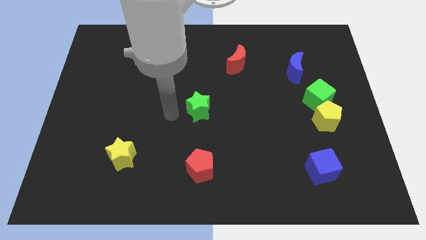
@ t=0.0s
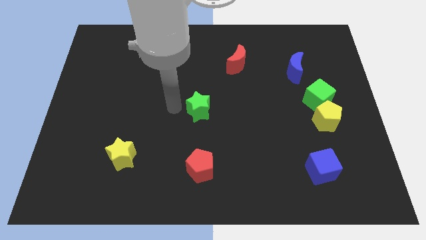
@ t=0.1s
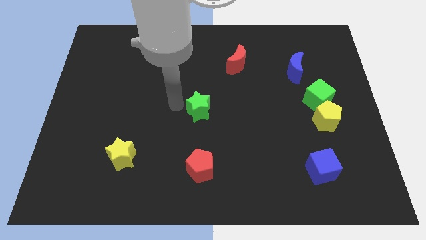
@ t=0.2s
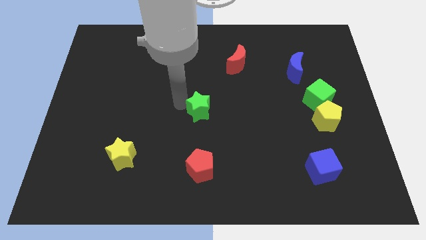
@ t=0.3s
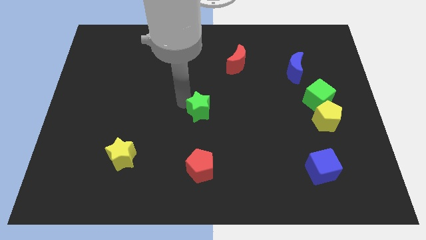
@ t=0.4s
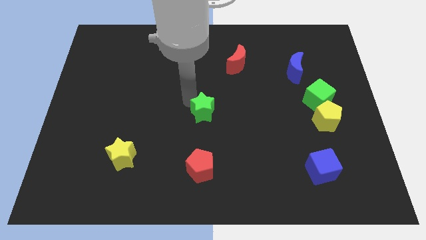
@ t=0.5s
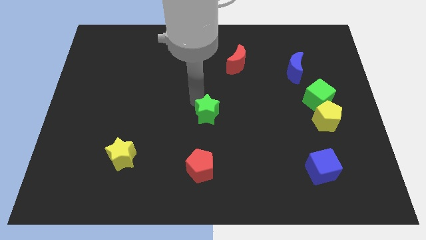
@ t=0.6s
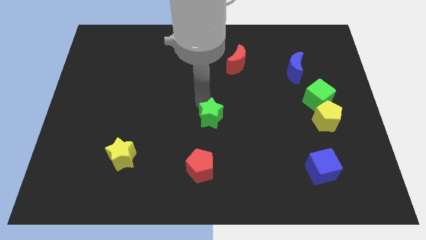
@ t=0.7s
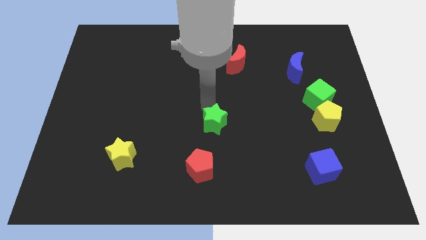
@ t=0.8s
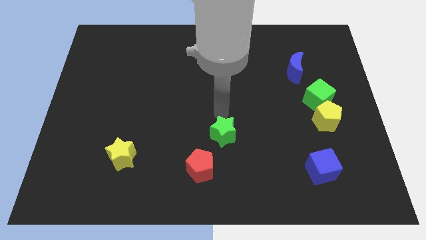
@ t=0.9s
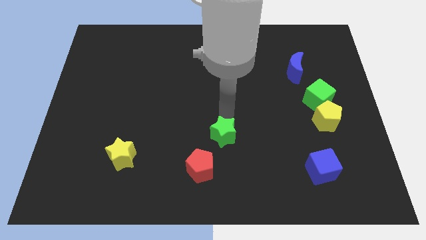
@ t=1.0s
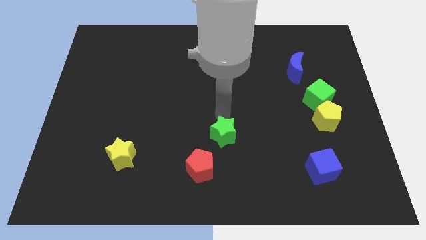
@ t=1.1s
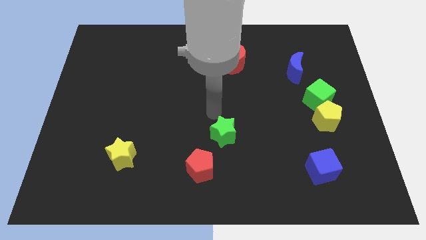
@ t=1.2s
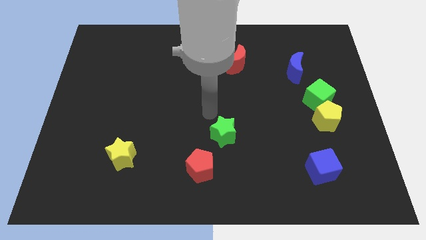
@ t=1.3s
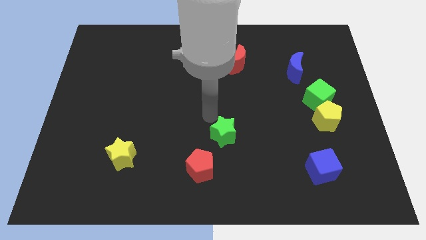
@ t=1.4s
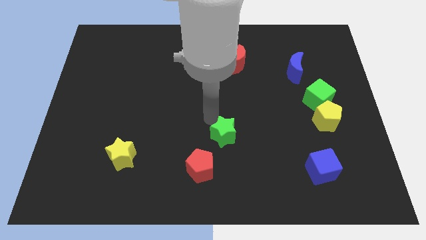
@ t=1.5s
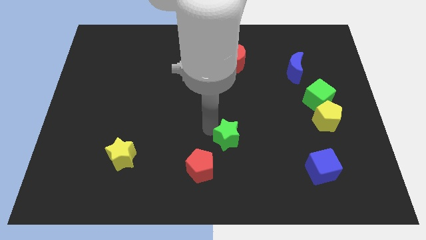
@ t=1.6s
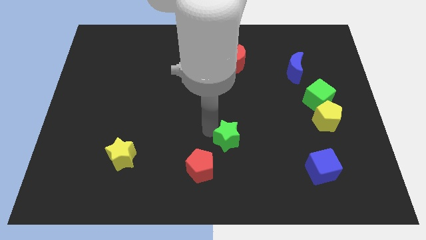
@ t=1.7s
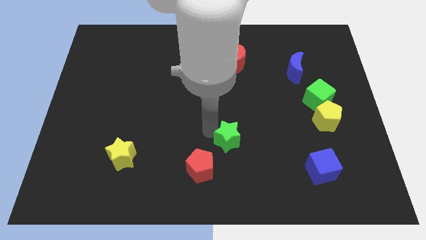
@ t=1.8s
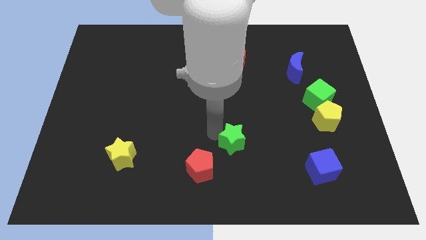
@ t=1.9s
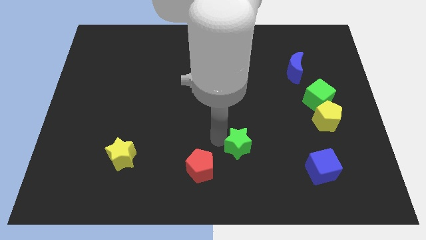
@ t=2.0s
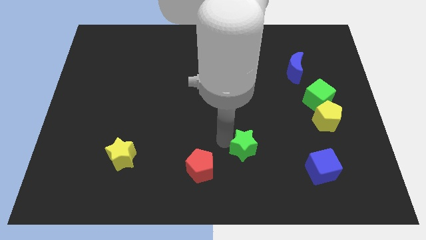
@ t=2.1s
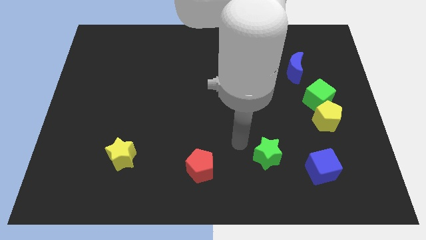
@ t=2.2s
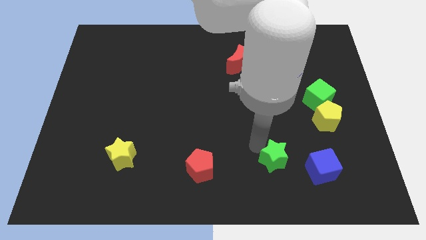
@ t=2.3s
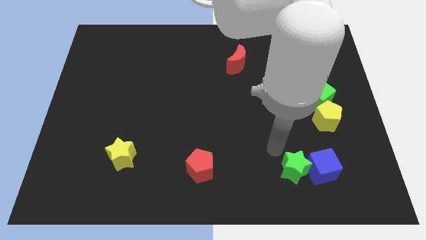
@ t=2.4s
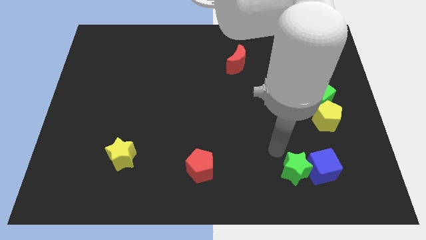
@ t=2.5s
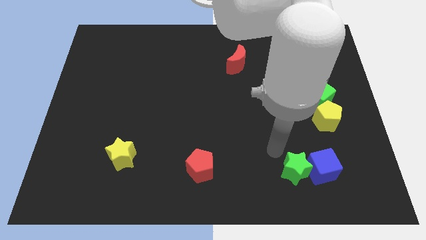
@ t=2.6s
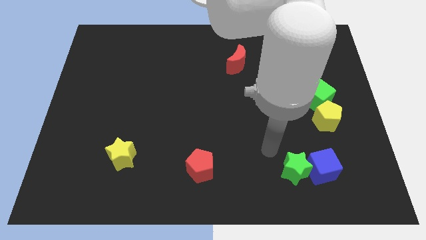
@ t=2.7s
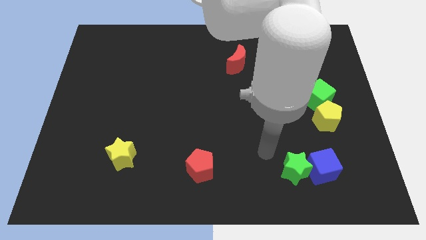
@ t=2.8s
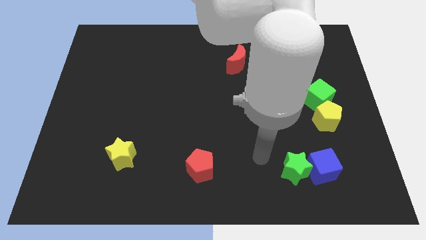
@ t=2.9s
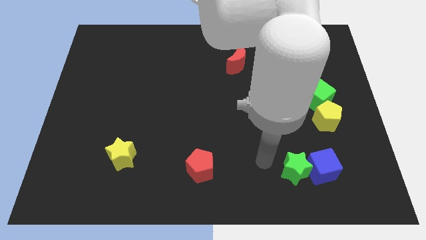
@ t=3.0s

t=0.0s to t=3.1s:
slide green star into blue cube

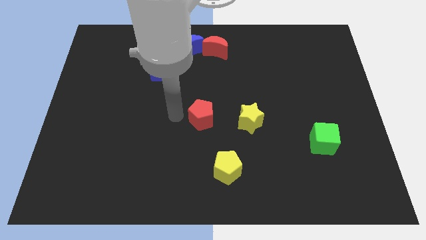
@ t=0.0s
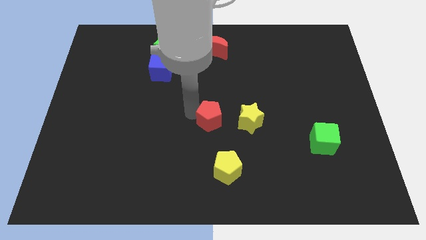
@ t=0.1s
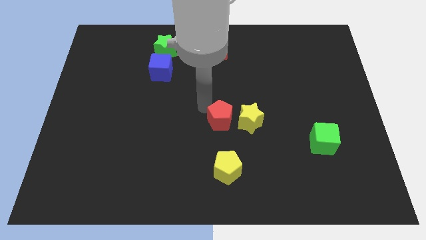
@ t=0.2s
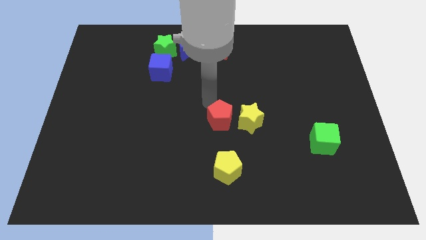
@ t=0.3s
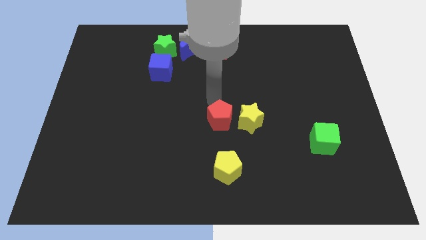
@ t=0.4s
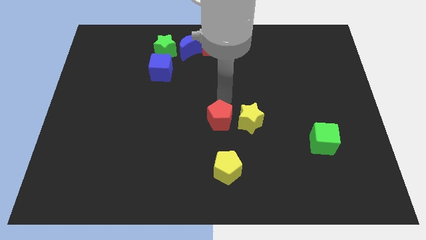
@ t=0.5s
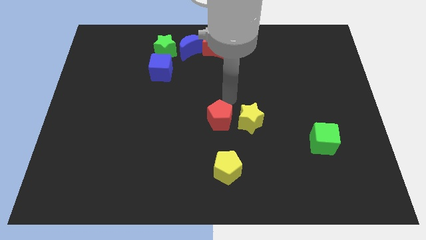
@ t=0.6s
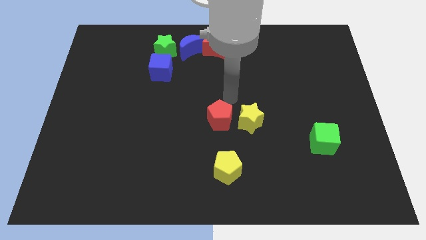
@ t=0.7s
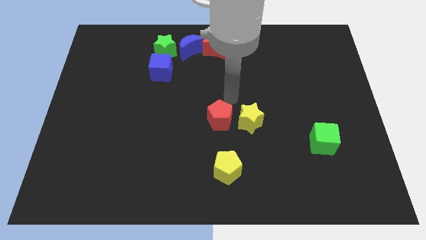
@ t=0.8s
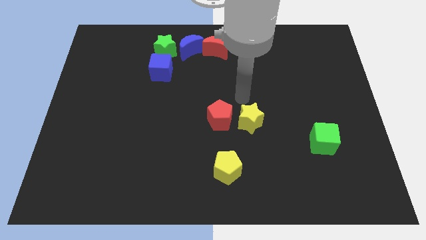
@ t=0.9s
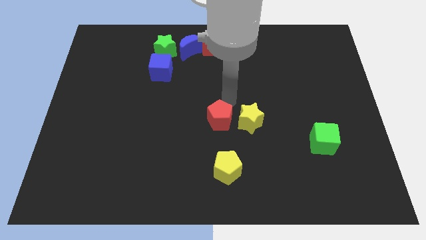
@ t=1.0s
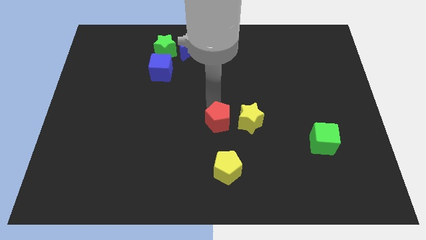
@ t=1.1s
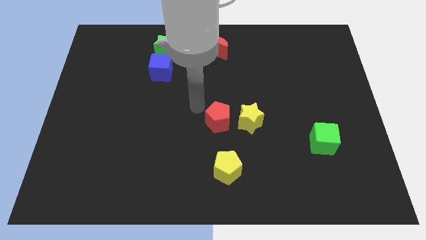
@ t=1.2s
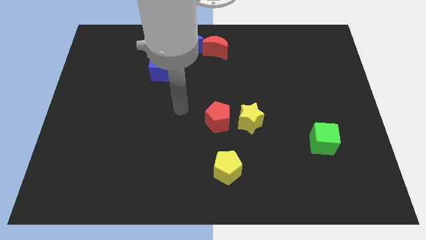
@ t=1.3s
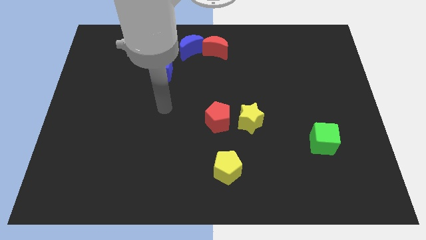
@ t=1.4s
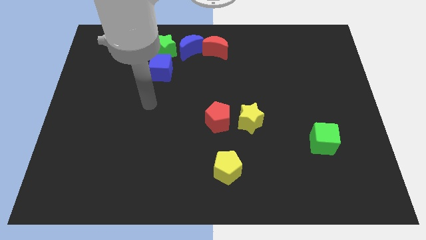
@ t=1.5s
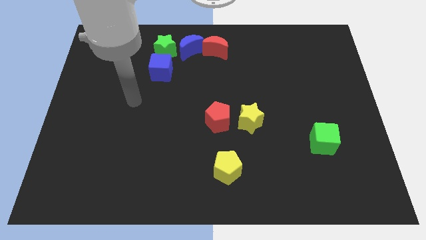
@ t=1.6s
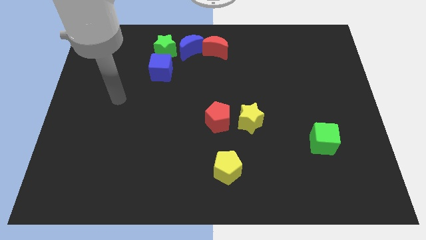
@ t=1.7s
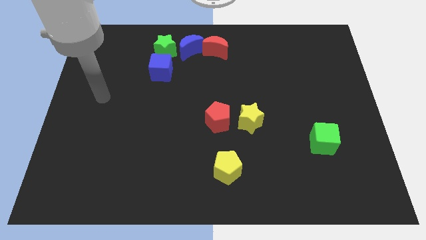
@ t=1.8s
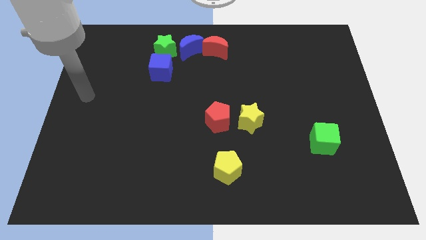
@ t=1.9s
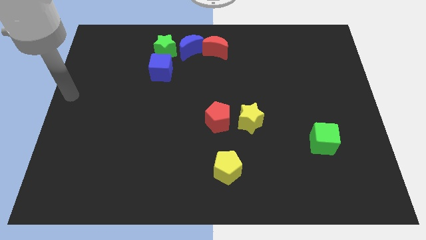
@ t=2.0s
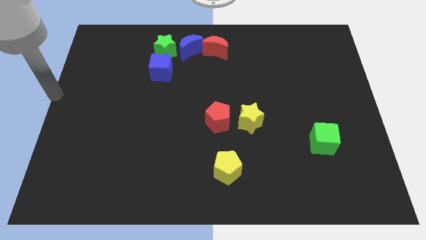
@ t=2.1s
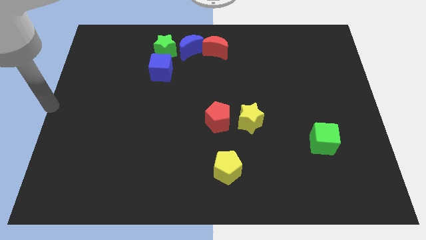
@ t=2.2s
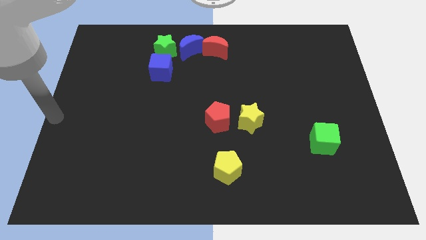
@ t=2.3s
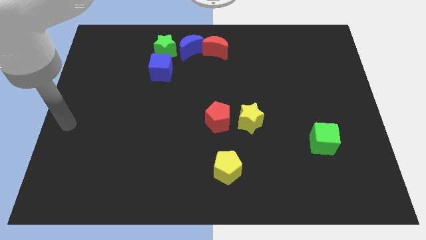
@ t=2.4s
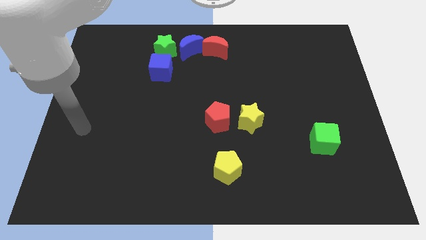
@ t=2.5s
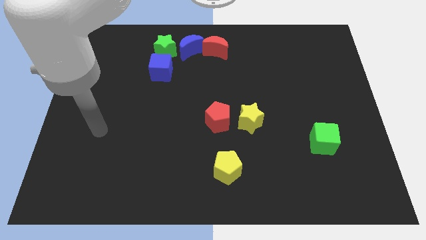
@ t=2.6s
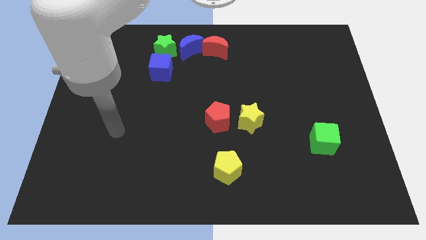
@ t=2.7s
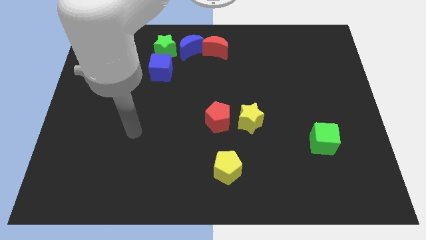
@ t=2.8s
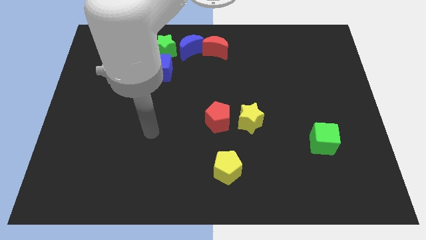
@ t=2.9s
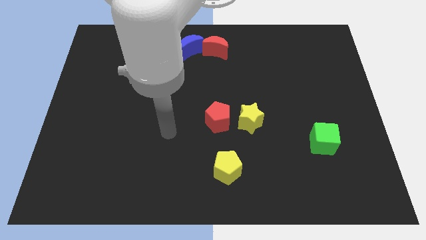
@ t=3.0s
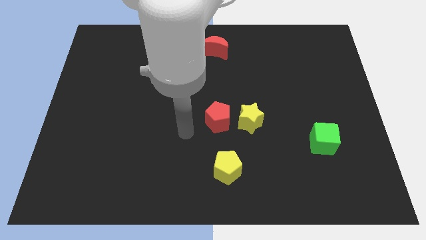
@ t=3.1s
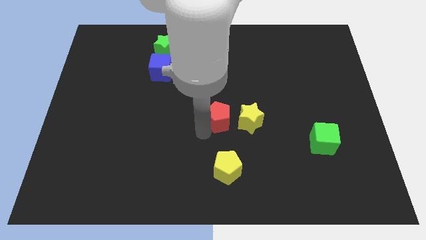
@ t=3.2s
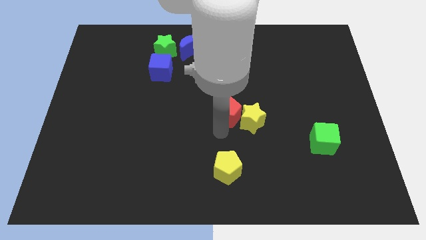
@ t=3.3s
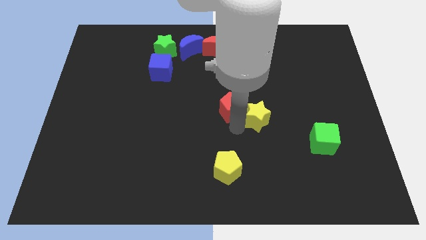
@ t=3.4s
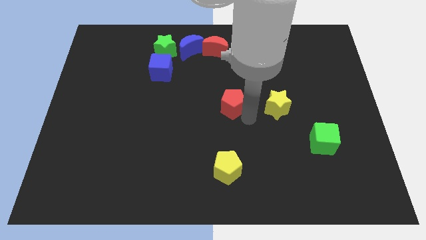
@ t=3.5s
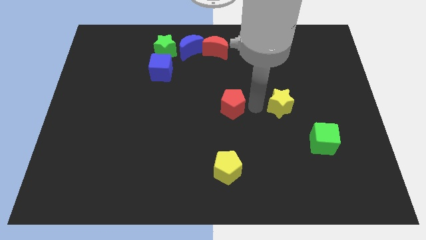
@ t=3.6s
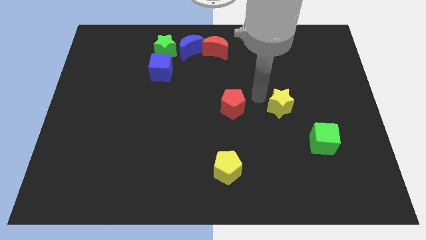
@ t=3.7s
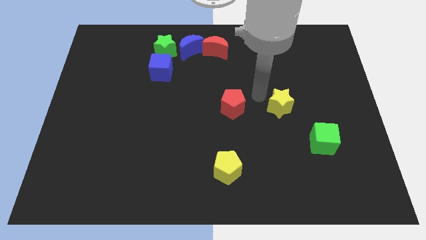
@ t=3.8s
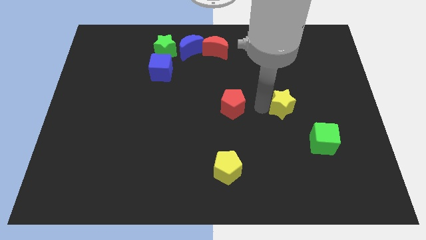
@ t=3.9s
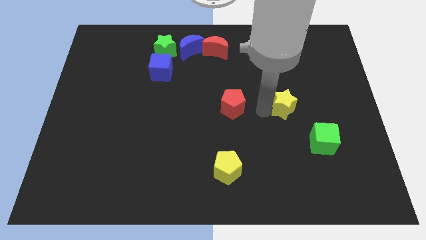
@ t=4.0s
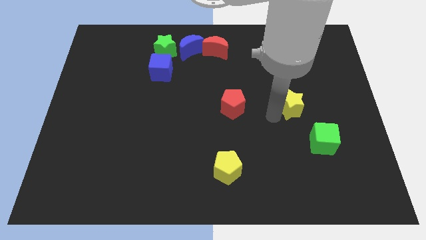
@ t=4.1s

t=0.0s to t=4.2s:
hit the yellow star with the red pentagon

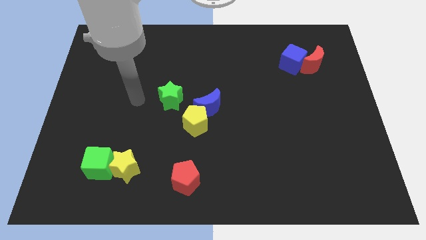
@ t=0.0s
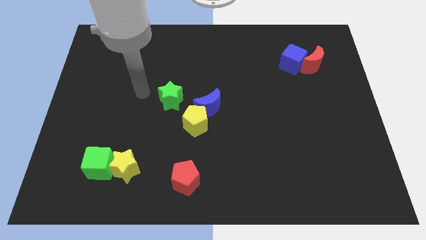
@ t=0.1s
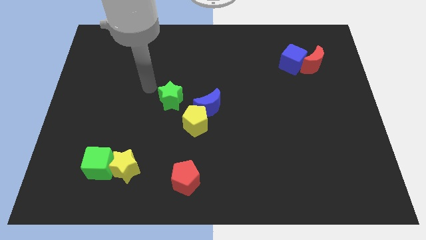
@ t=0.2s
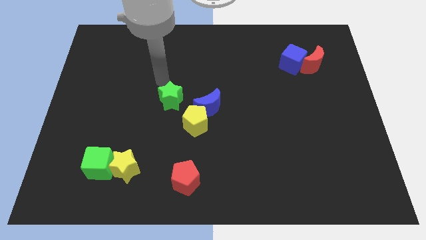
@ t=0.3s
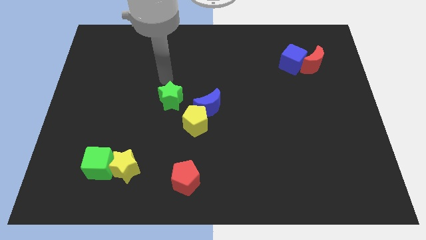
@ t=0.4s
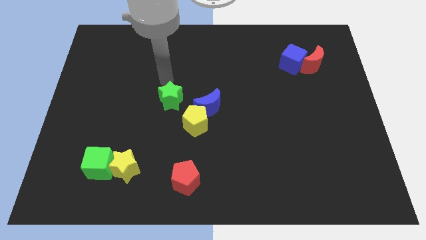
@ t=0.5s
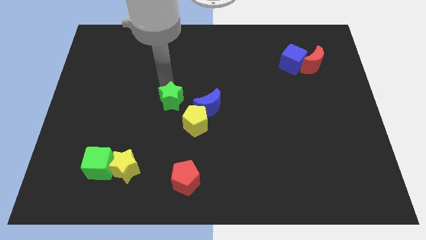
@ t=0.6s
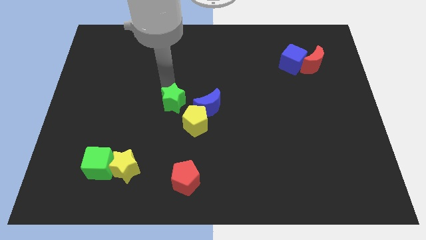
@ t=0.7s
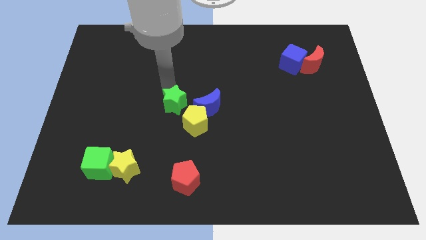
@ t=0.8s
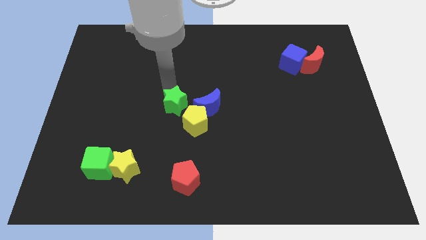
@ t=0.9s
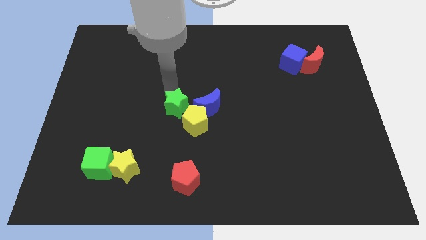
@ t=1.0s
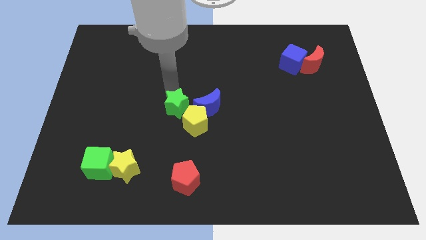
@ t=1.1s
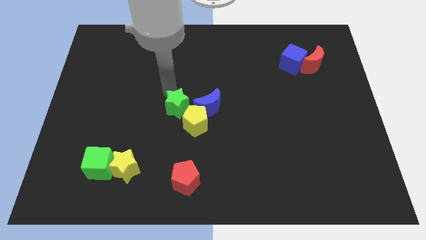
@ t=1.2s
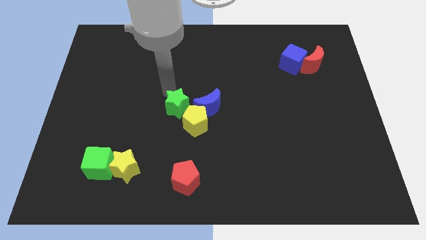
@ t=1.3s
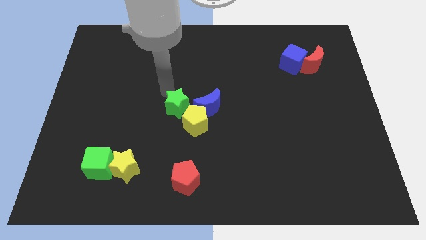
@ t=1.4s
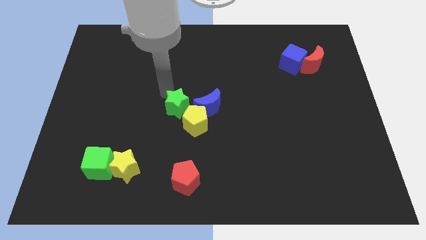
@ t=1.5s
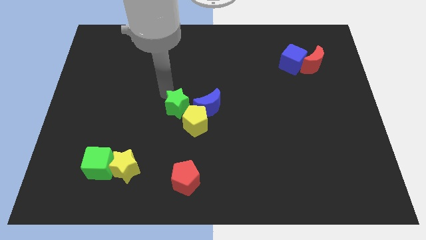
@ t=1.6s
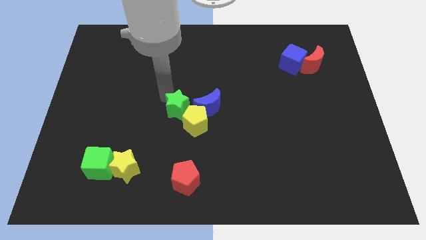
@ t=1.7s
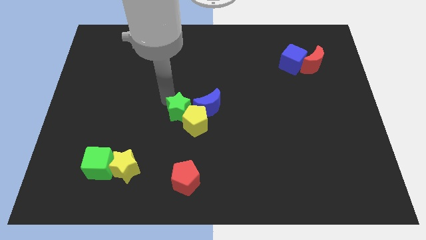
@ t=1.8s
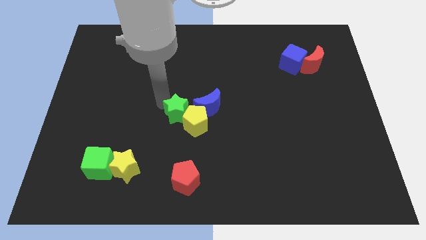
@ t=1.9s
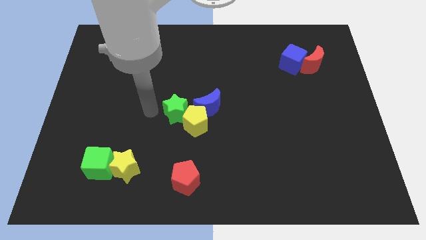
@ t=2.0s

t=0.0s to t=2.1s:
push green star close to yellow pentagon
